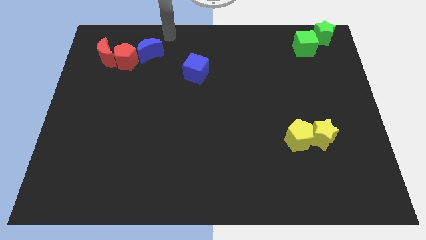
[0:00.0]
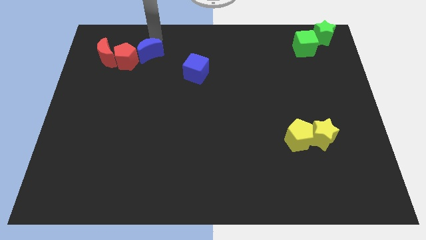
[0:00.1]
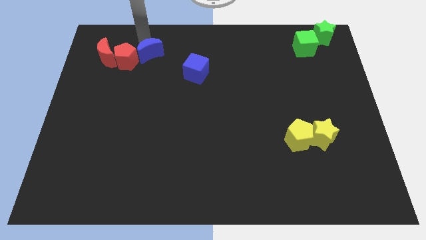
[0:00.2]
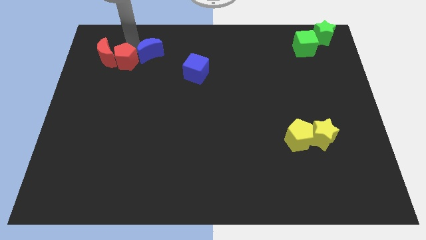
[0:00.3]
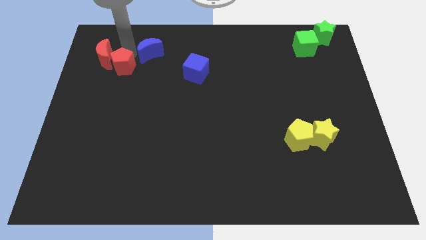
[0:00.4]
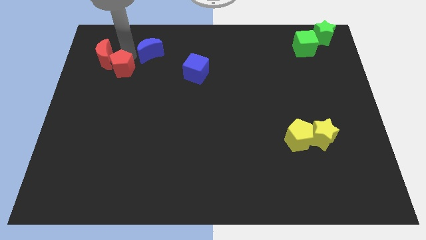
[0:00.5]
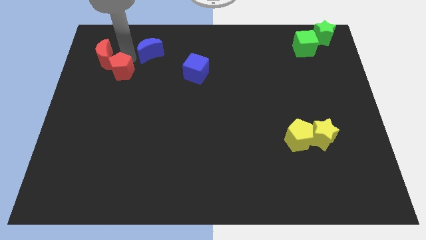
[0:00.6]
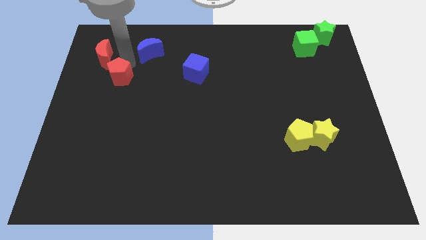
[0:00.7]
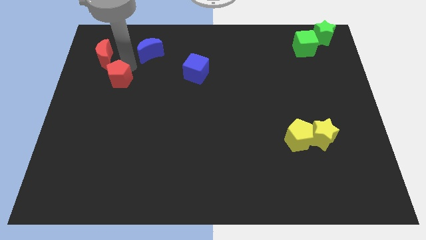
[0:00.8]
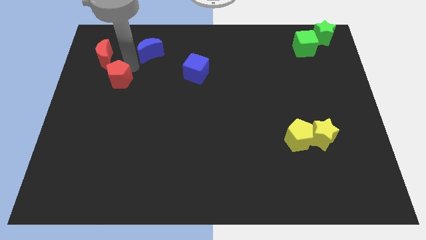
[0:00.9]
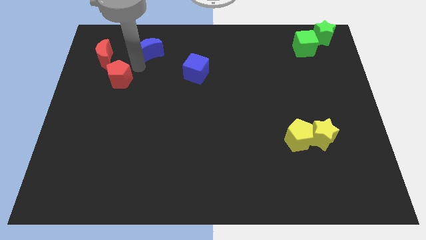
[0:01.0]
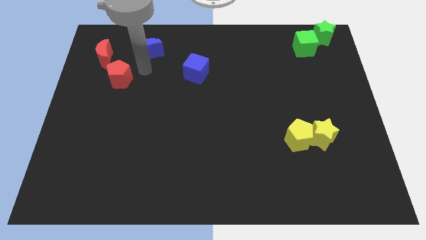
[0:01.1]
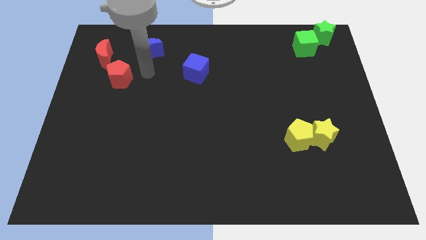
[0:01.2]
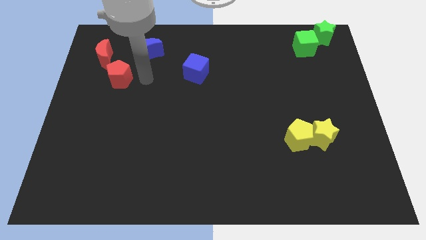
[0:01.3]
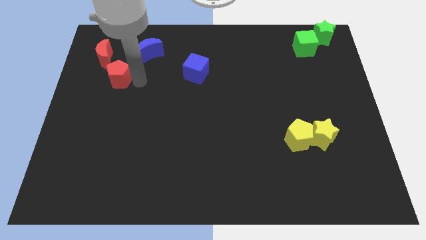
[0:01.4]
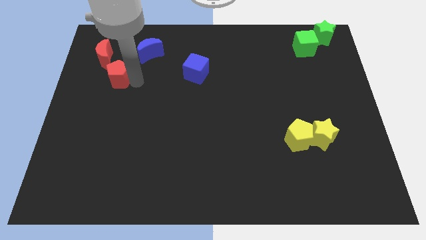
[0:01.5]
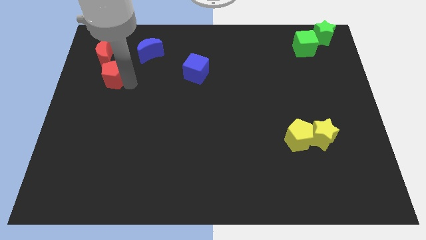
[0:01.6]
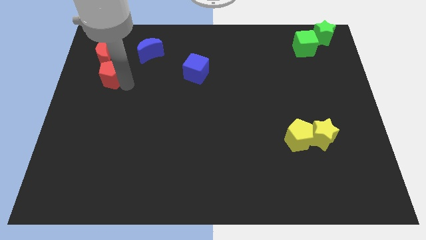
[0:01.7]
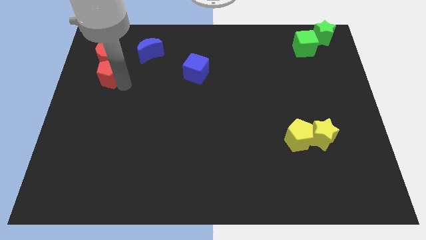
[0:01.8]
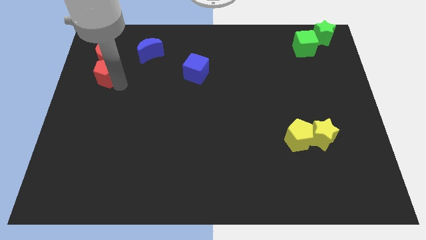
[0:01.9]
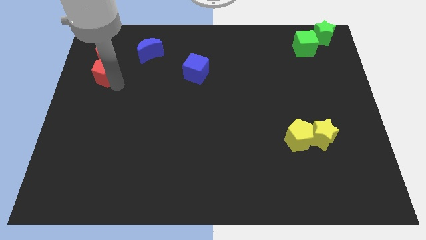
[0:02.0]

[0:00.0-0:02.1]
place the red pentagon below to the red crescent

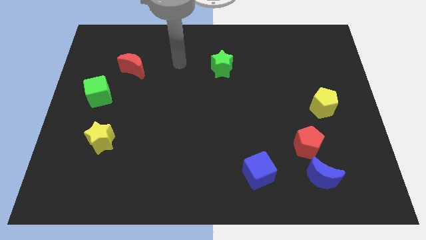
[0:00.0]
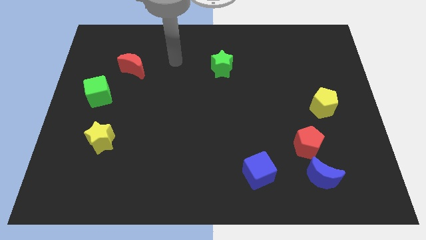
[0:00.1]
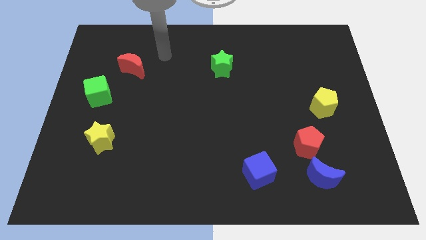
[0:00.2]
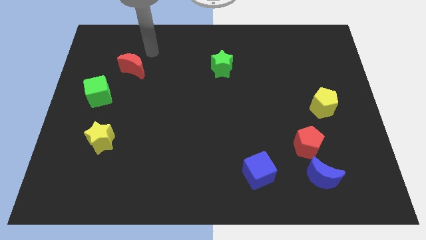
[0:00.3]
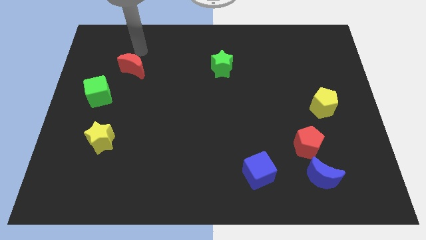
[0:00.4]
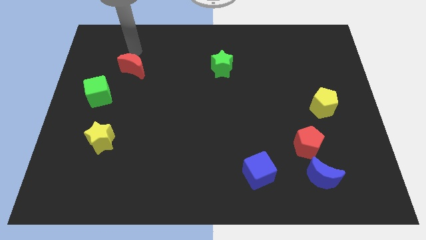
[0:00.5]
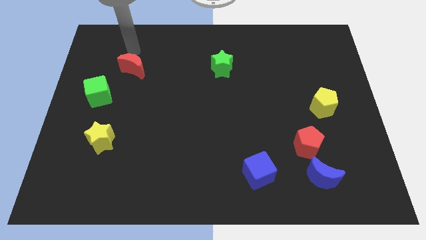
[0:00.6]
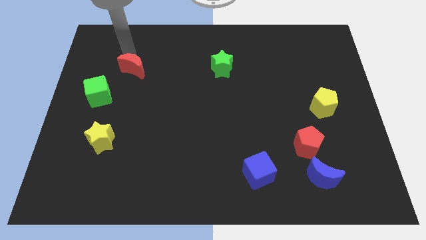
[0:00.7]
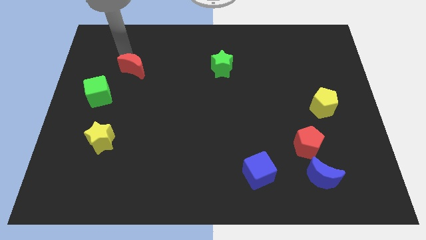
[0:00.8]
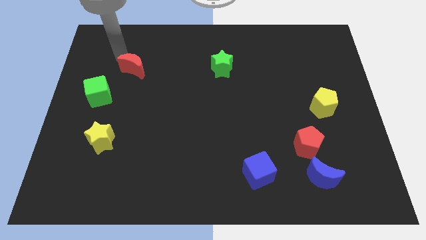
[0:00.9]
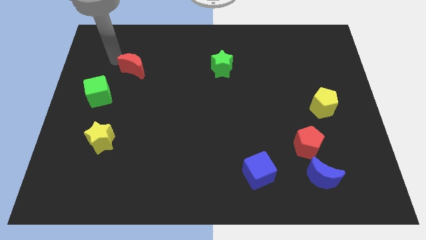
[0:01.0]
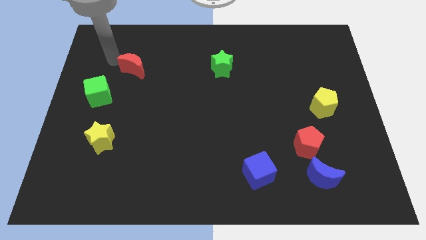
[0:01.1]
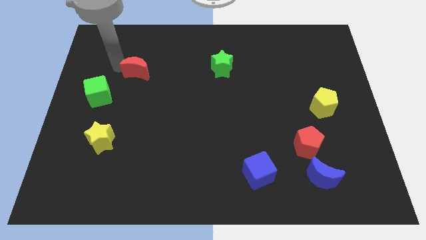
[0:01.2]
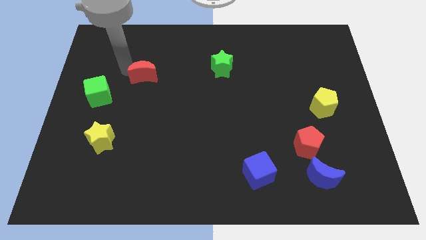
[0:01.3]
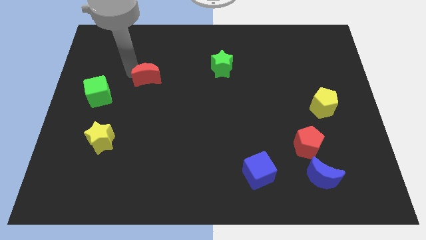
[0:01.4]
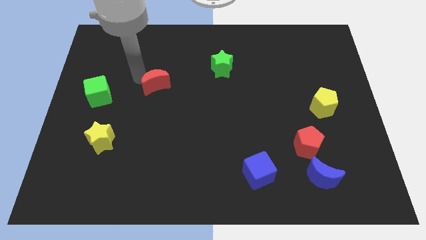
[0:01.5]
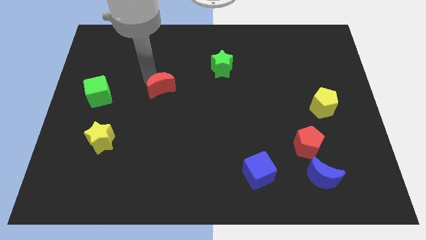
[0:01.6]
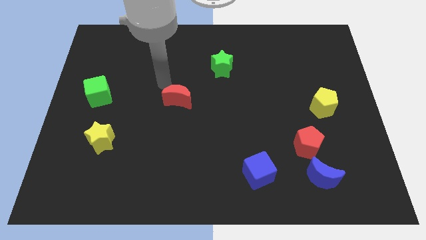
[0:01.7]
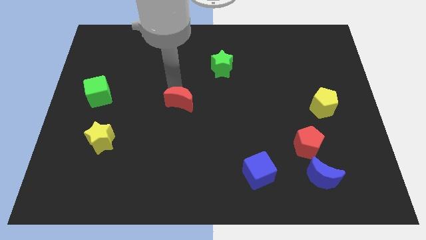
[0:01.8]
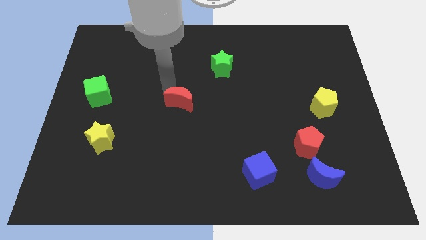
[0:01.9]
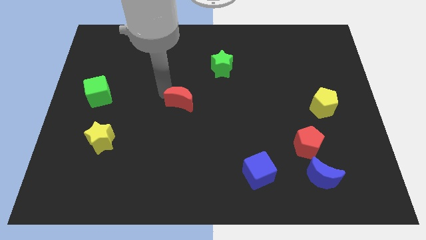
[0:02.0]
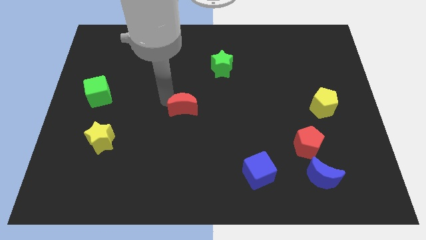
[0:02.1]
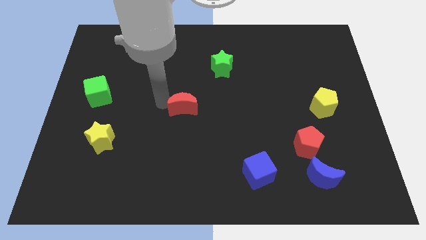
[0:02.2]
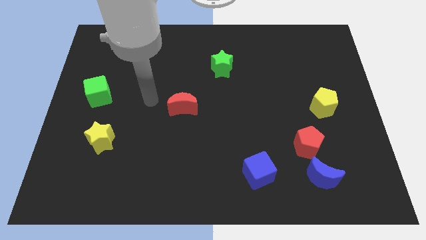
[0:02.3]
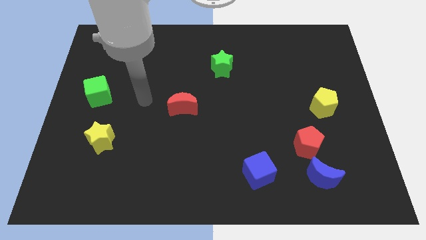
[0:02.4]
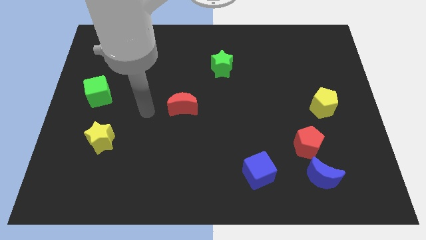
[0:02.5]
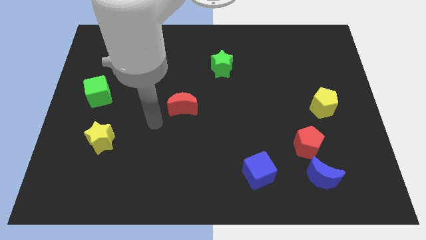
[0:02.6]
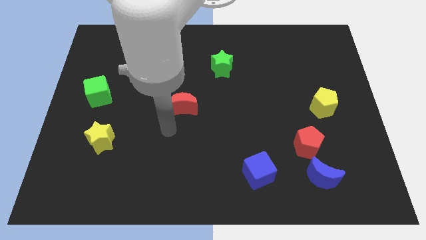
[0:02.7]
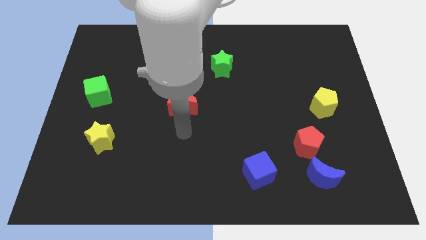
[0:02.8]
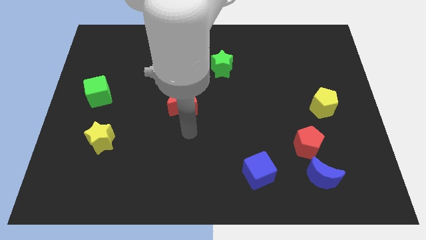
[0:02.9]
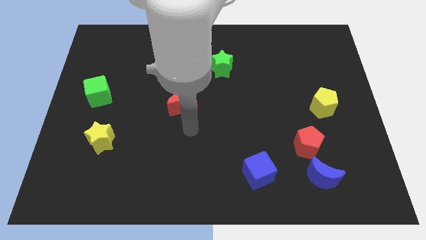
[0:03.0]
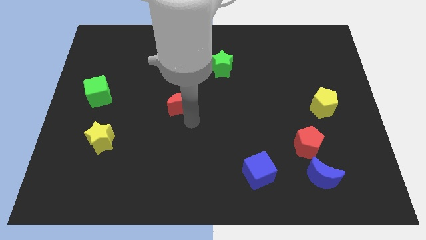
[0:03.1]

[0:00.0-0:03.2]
push the red crescent towards the center of the board

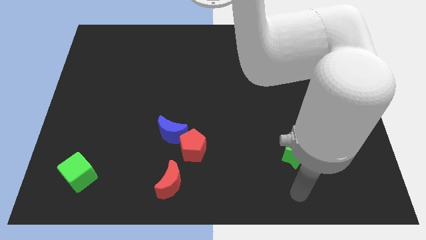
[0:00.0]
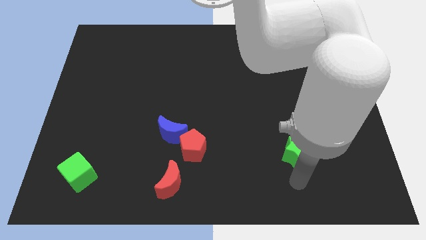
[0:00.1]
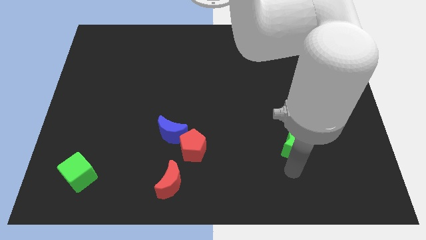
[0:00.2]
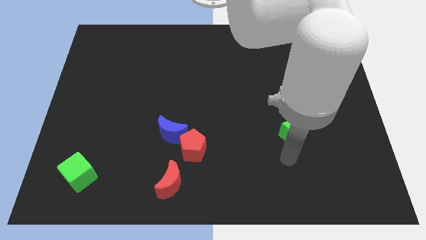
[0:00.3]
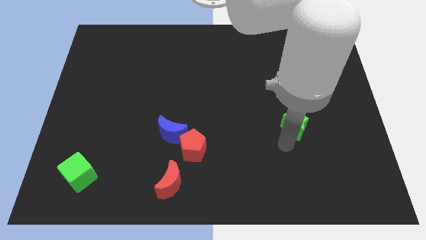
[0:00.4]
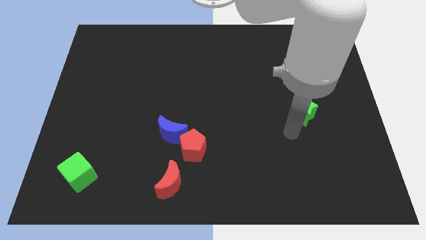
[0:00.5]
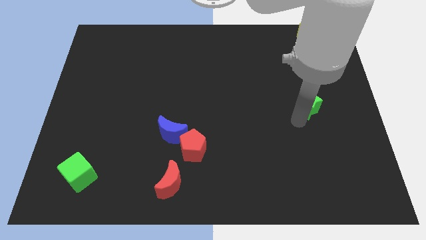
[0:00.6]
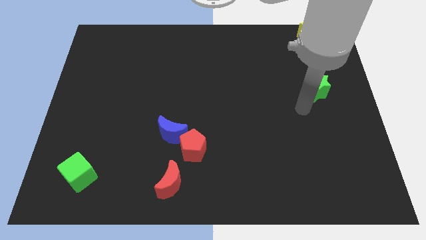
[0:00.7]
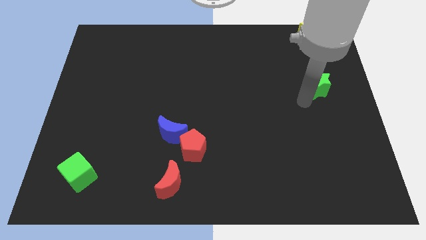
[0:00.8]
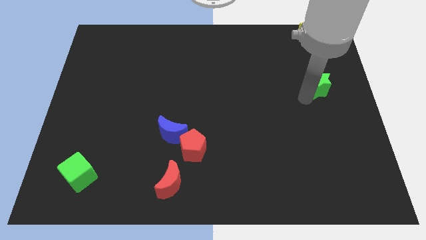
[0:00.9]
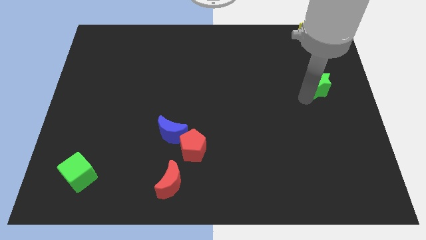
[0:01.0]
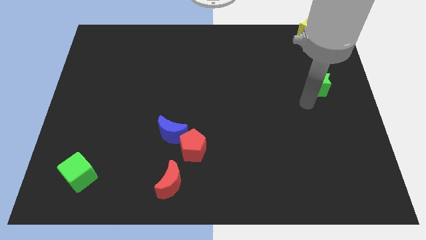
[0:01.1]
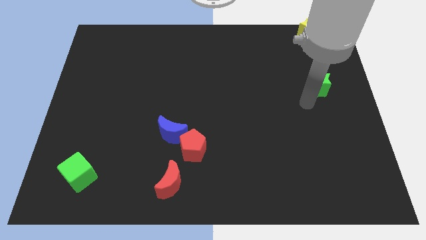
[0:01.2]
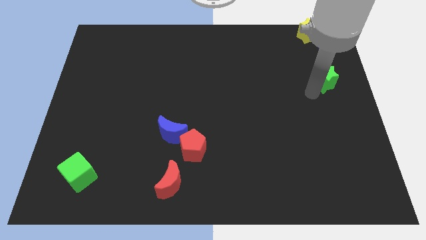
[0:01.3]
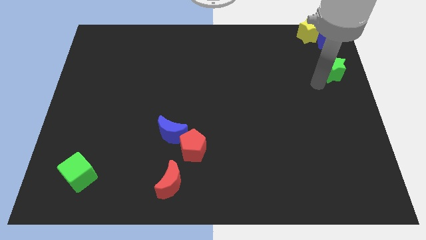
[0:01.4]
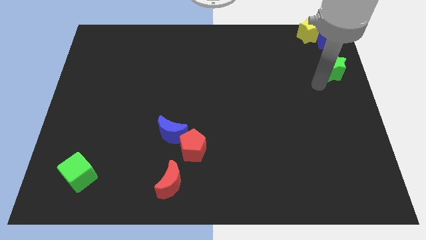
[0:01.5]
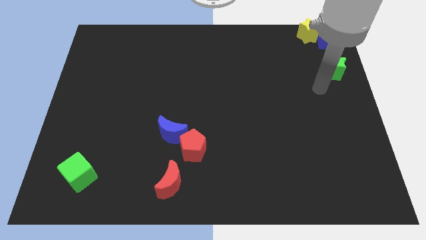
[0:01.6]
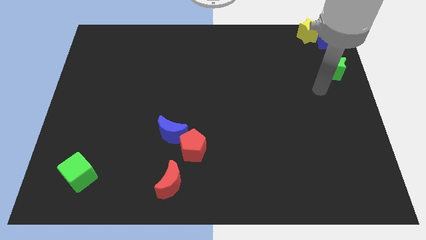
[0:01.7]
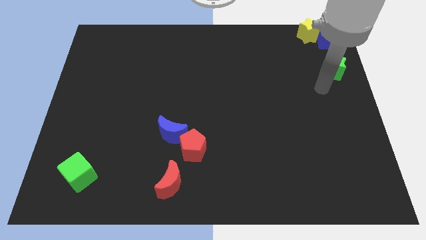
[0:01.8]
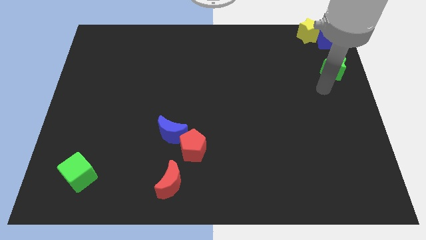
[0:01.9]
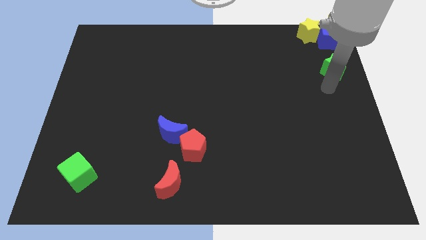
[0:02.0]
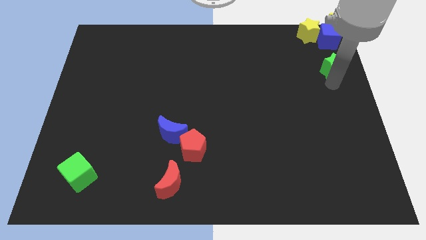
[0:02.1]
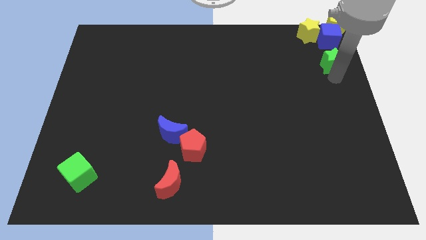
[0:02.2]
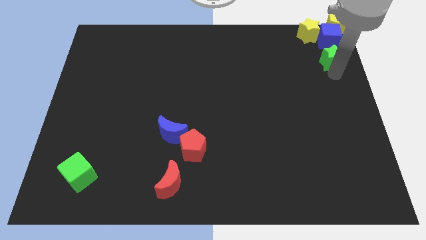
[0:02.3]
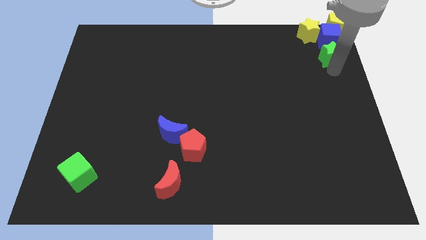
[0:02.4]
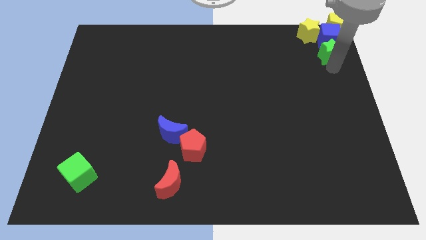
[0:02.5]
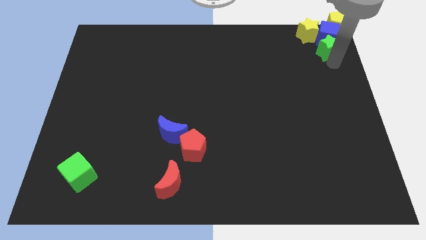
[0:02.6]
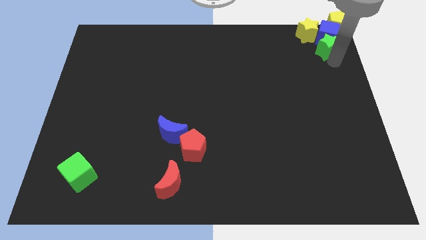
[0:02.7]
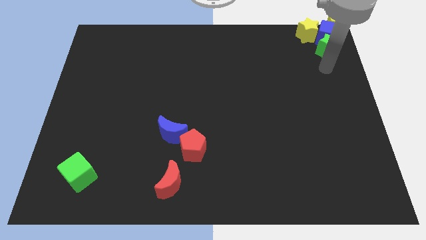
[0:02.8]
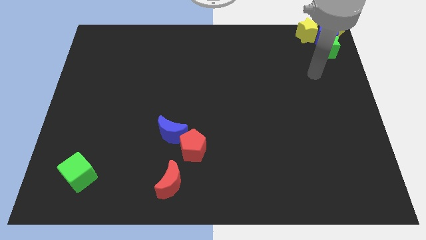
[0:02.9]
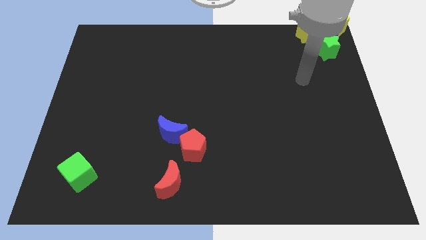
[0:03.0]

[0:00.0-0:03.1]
push green star into blue cube

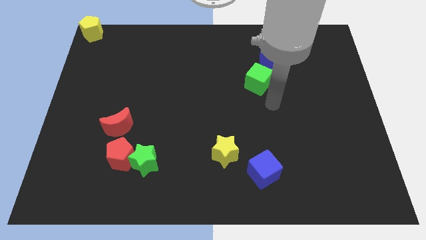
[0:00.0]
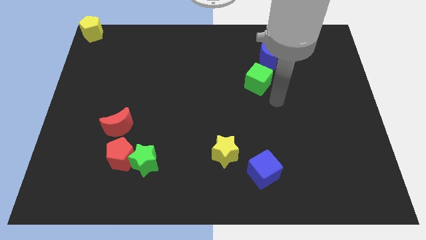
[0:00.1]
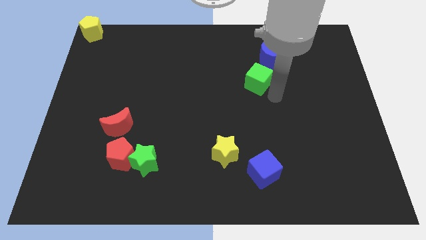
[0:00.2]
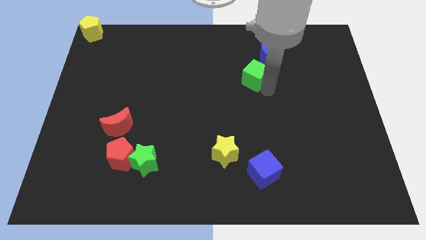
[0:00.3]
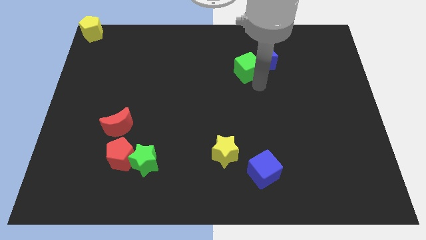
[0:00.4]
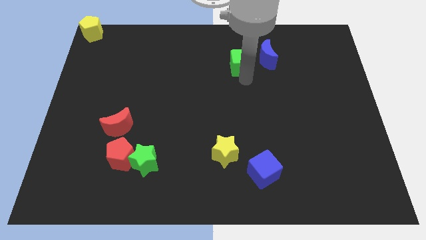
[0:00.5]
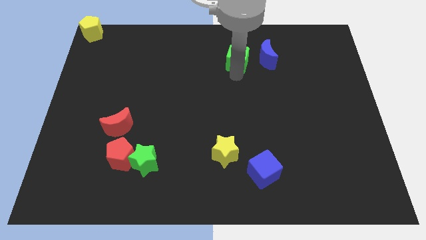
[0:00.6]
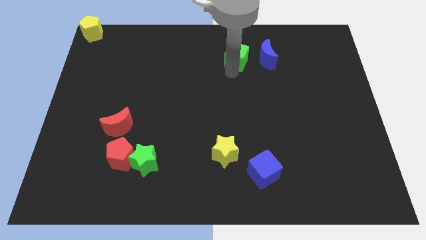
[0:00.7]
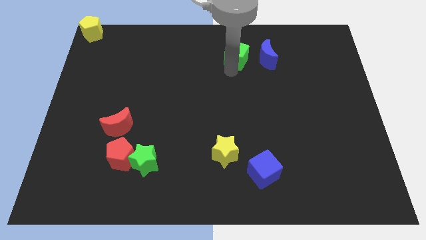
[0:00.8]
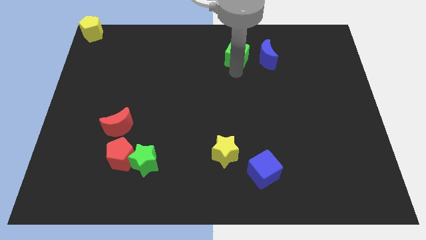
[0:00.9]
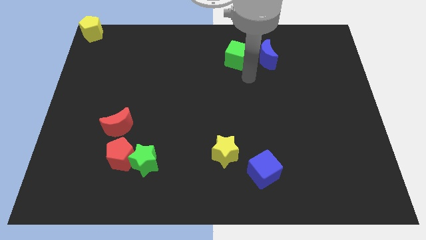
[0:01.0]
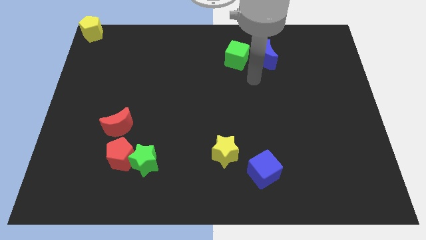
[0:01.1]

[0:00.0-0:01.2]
move the green cube to the left side of the blue moon
